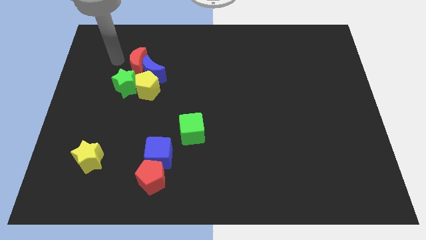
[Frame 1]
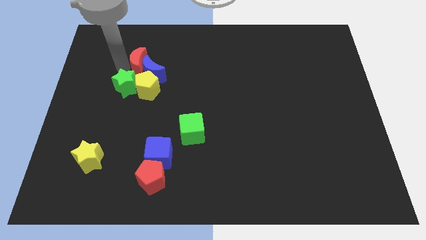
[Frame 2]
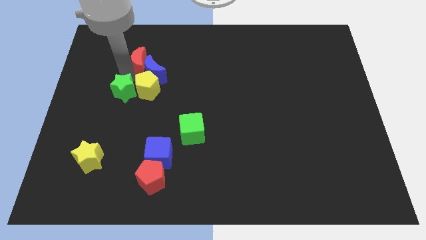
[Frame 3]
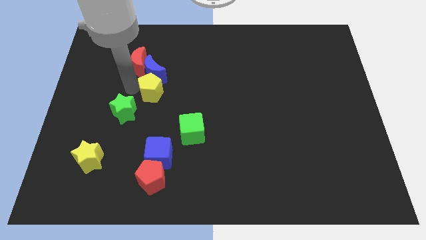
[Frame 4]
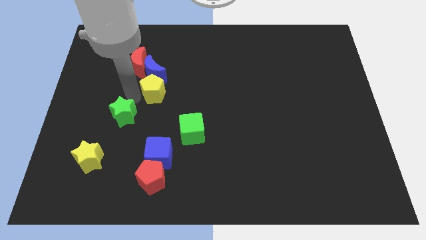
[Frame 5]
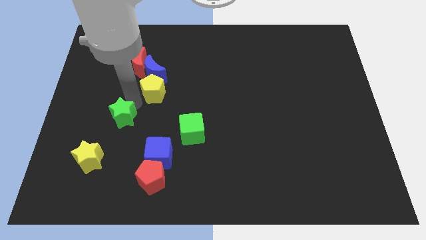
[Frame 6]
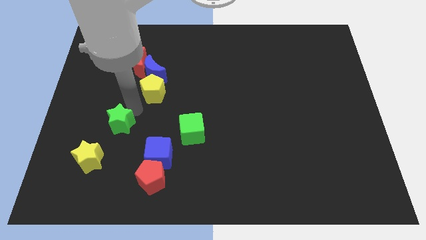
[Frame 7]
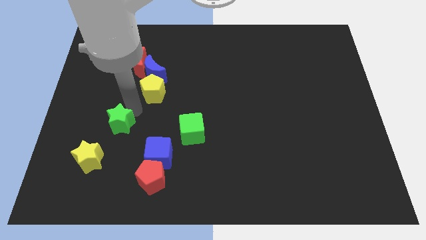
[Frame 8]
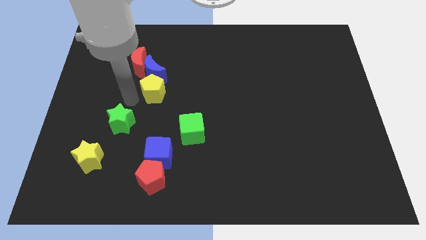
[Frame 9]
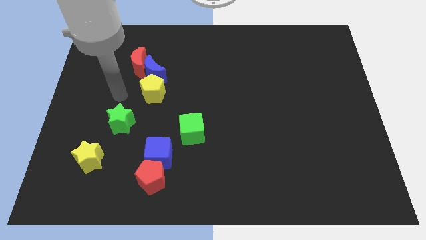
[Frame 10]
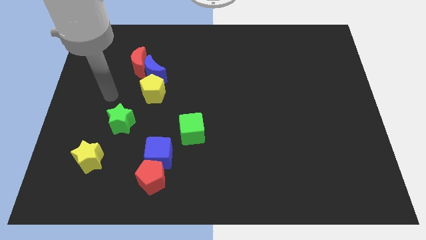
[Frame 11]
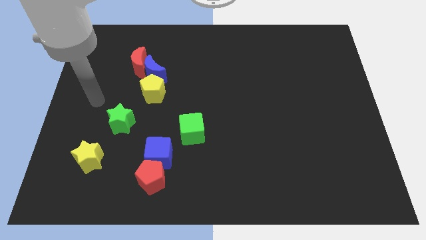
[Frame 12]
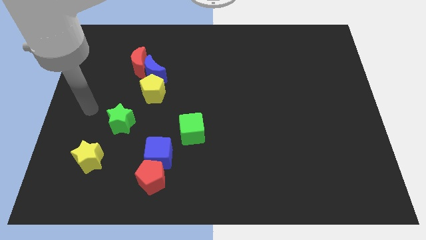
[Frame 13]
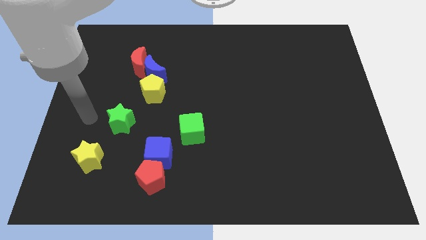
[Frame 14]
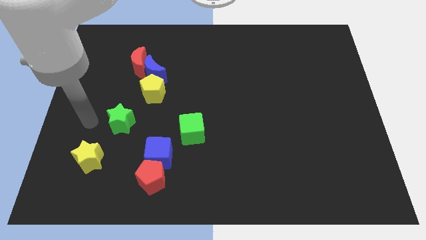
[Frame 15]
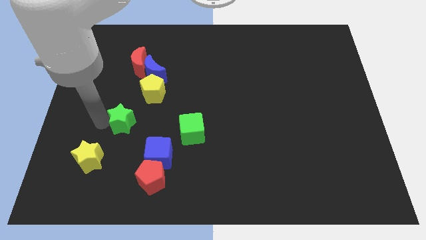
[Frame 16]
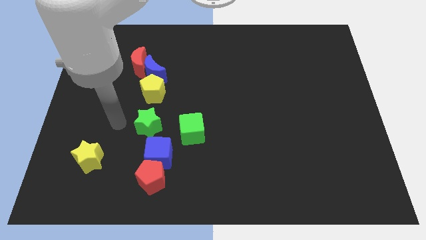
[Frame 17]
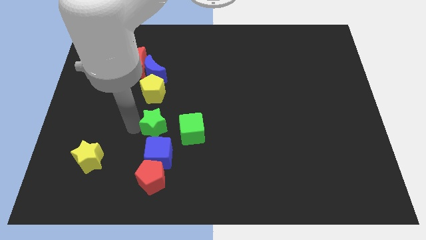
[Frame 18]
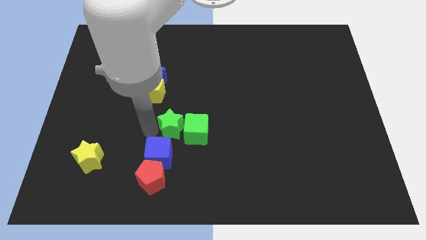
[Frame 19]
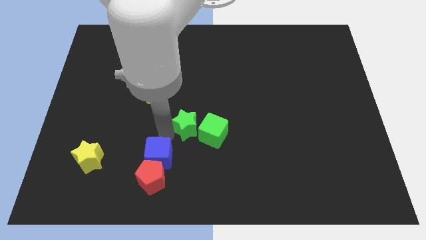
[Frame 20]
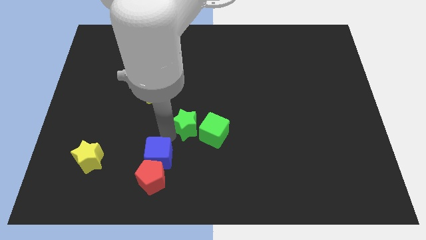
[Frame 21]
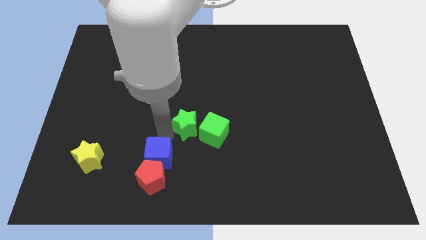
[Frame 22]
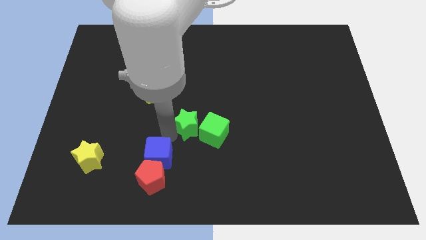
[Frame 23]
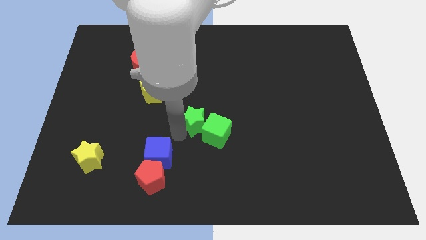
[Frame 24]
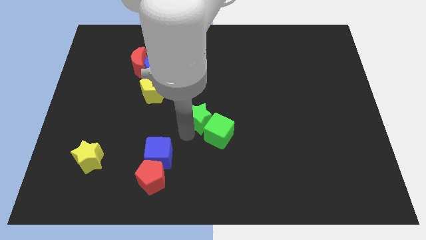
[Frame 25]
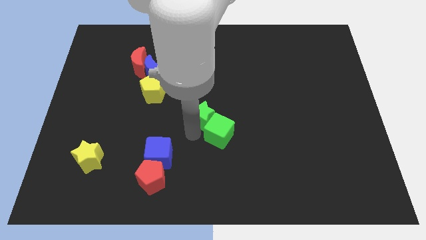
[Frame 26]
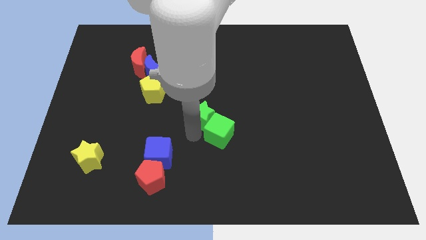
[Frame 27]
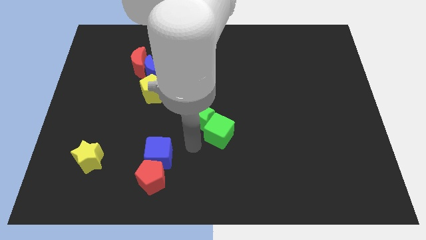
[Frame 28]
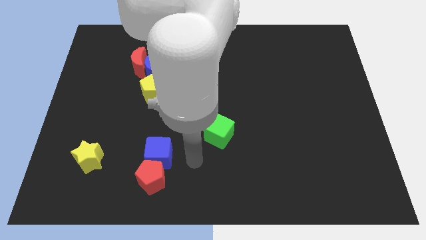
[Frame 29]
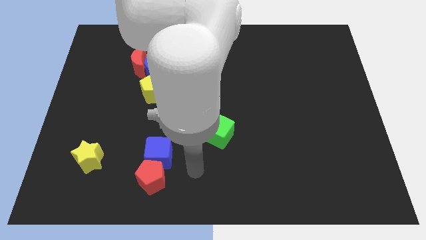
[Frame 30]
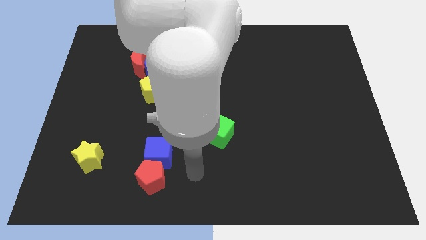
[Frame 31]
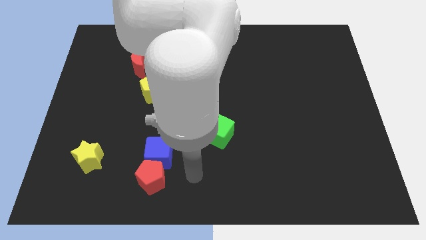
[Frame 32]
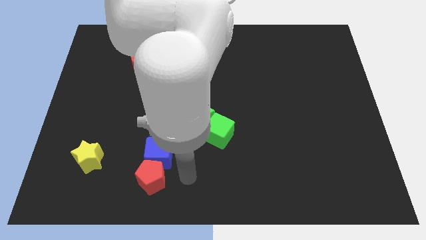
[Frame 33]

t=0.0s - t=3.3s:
push green star near to the green cube

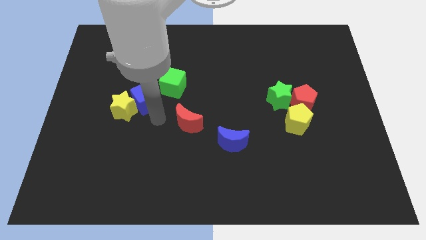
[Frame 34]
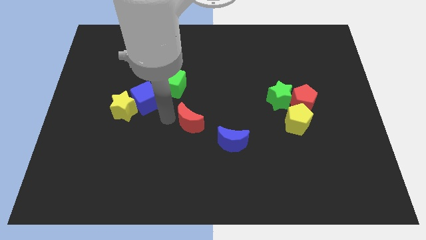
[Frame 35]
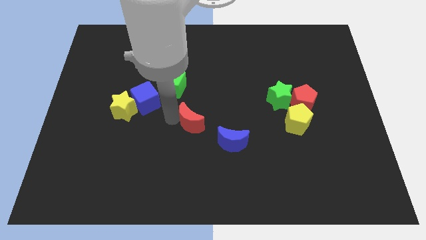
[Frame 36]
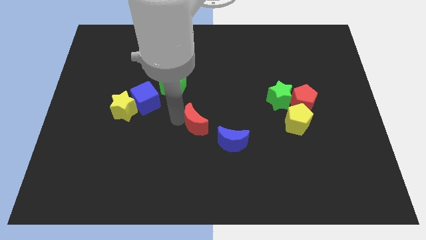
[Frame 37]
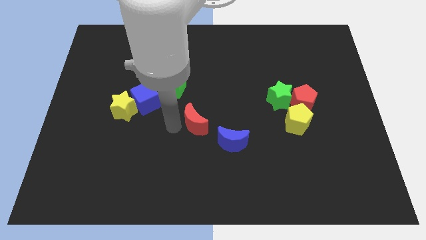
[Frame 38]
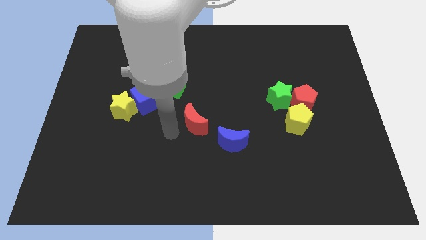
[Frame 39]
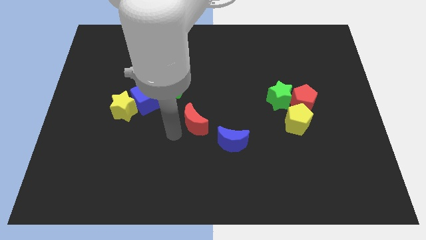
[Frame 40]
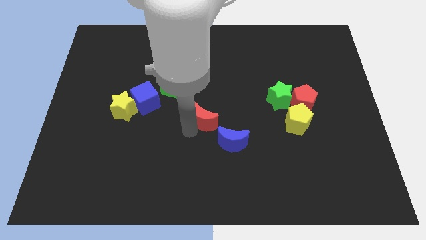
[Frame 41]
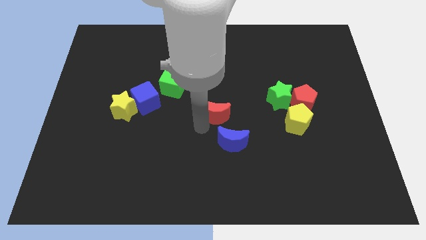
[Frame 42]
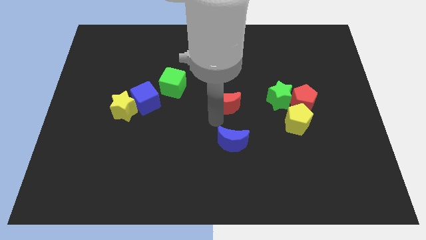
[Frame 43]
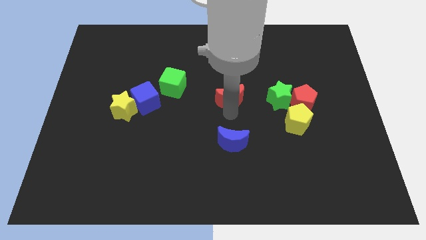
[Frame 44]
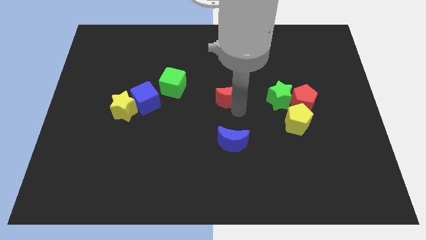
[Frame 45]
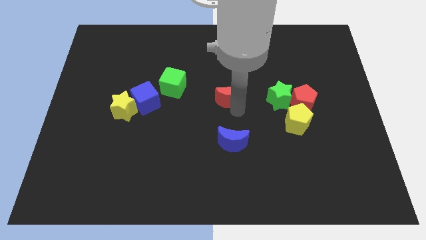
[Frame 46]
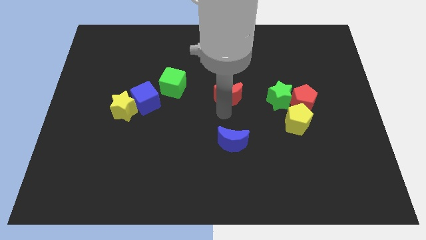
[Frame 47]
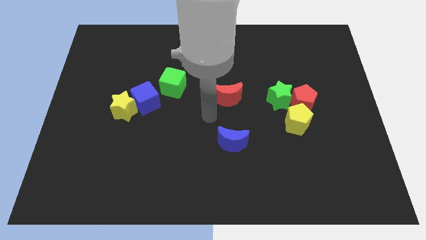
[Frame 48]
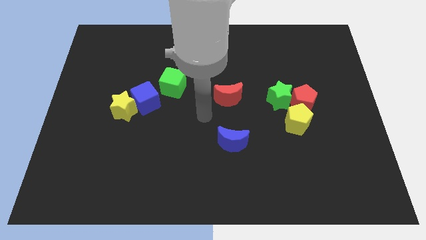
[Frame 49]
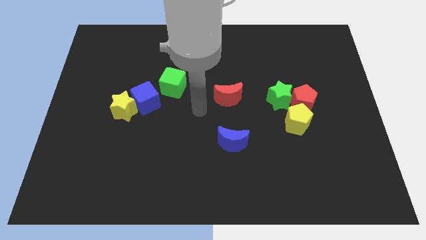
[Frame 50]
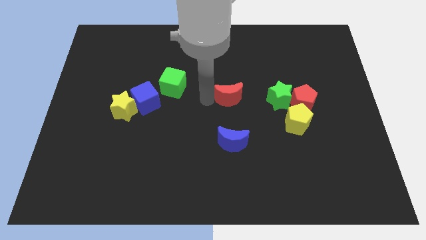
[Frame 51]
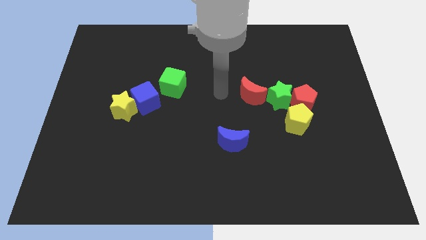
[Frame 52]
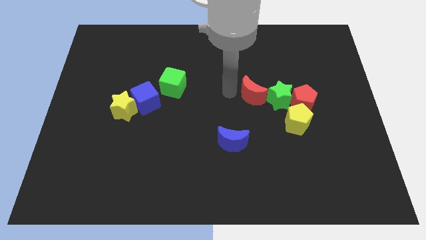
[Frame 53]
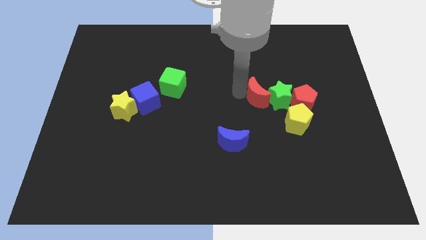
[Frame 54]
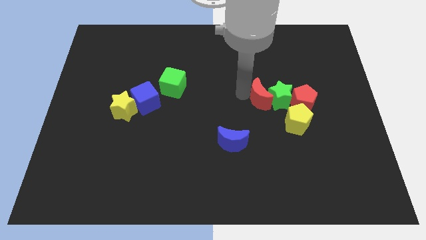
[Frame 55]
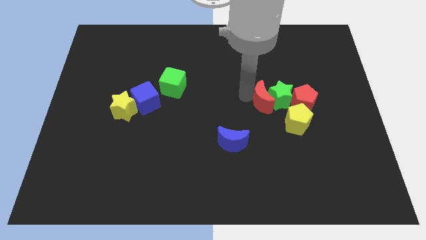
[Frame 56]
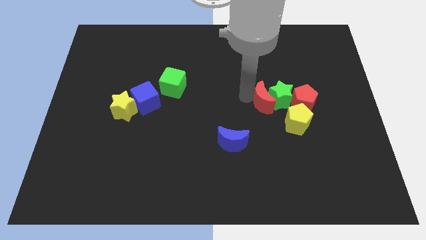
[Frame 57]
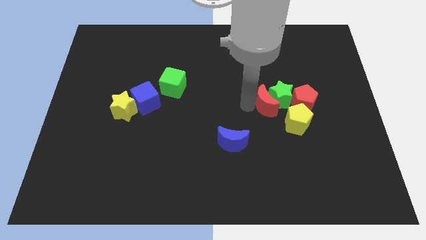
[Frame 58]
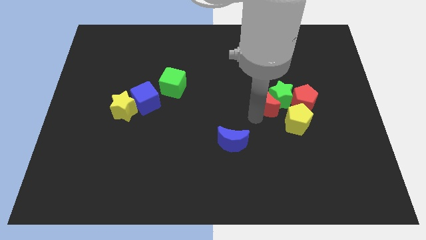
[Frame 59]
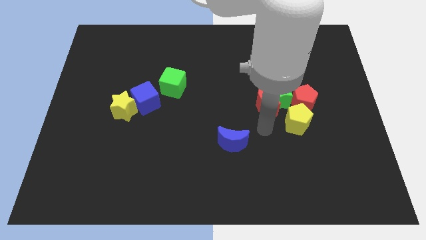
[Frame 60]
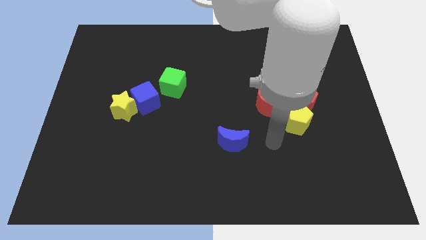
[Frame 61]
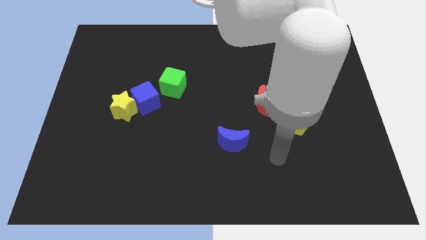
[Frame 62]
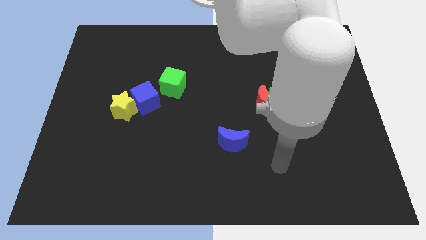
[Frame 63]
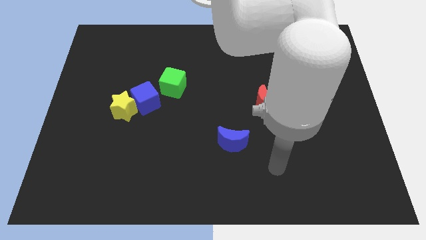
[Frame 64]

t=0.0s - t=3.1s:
move the blue crescent to the blue cube

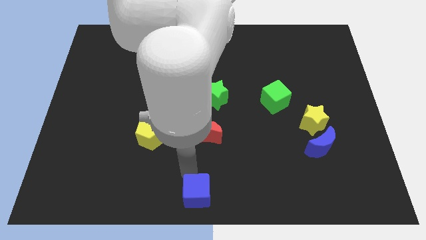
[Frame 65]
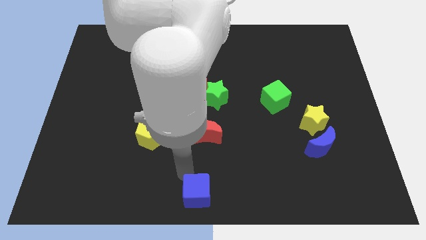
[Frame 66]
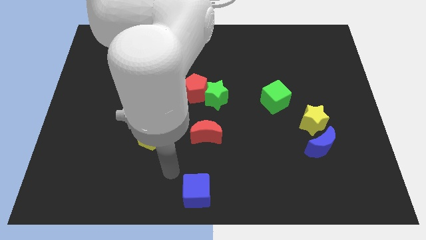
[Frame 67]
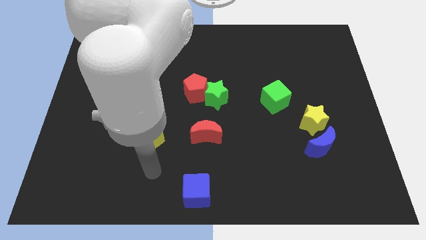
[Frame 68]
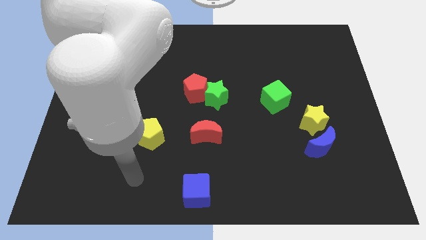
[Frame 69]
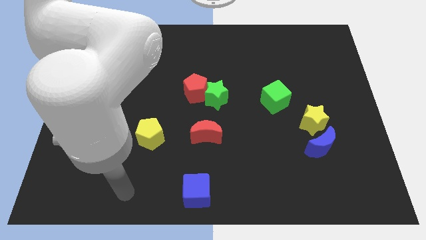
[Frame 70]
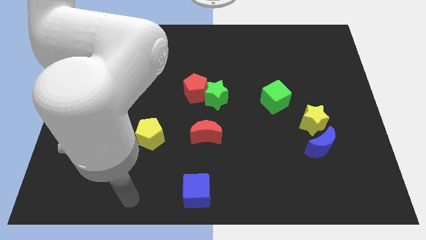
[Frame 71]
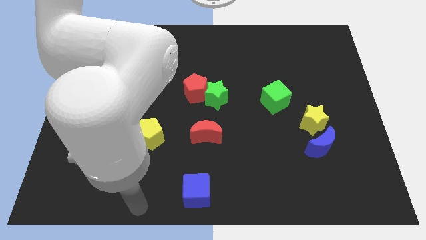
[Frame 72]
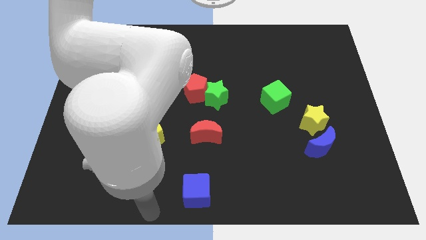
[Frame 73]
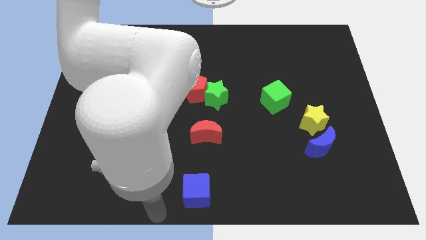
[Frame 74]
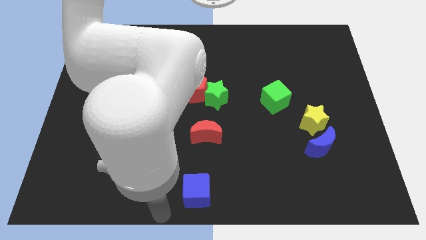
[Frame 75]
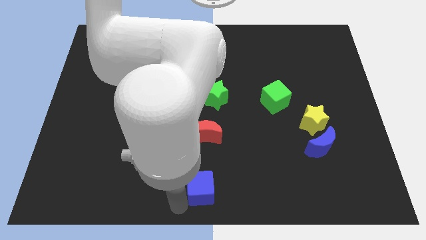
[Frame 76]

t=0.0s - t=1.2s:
place your arm at the bottom of the blue cube

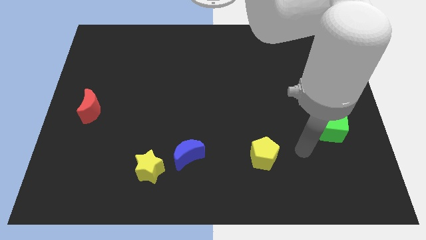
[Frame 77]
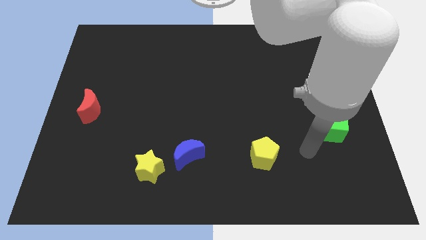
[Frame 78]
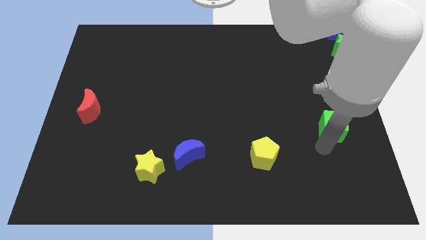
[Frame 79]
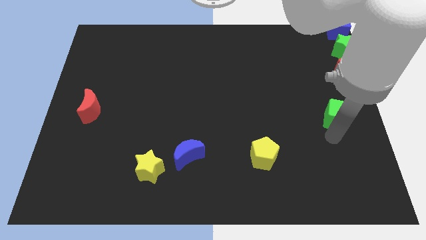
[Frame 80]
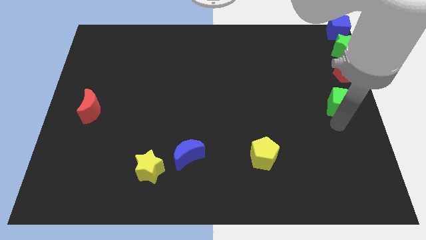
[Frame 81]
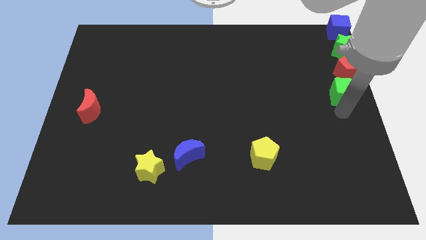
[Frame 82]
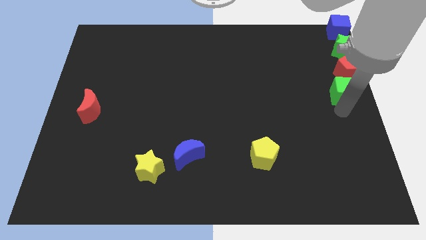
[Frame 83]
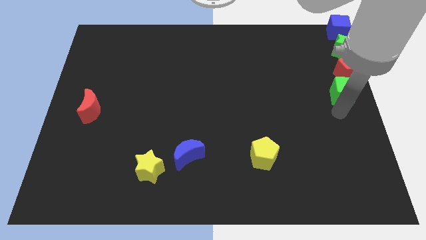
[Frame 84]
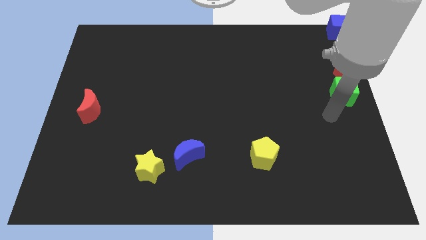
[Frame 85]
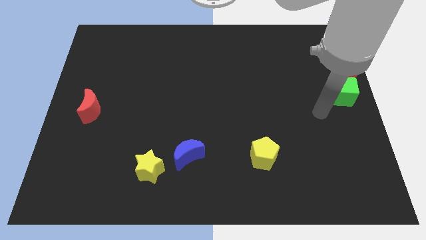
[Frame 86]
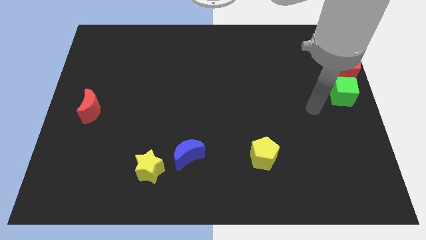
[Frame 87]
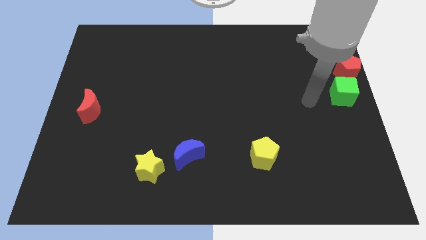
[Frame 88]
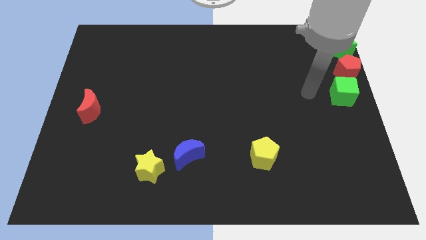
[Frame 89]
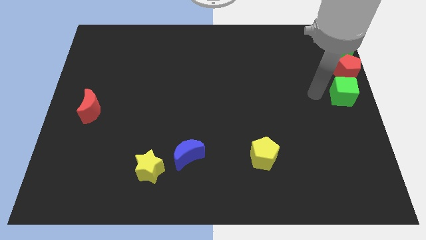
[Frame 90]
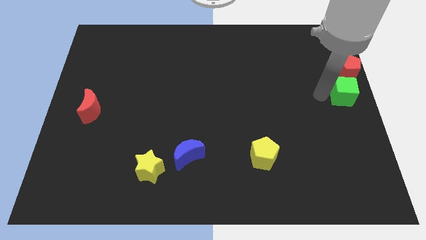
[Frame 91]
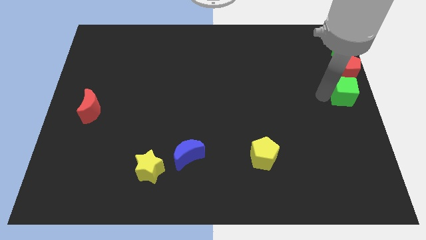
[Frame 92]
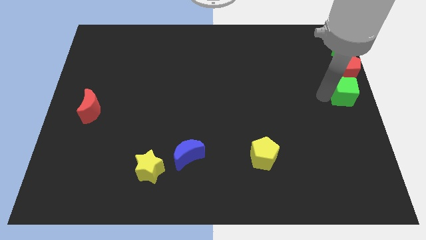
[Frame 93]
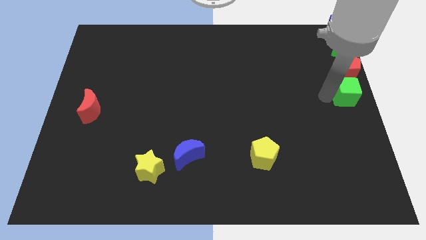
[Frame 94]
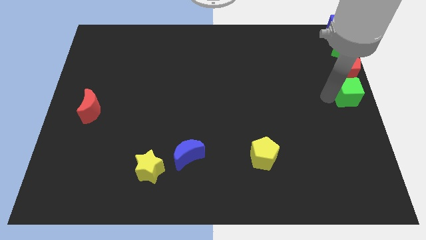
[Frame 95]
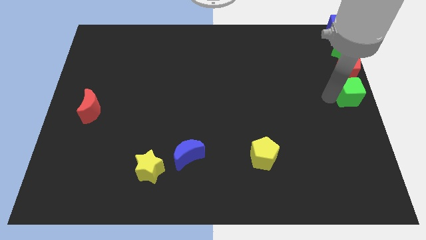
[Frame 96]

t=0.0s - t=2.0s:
move the green cube to the bottom of the red pentagon
